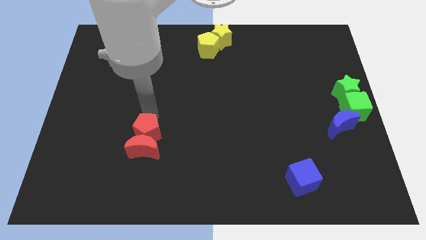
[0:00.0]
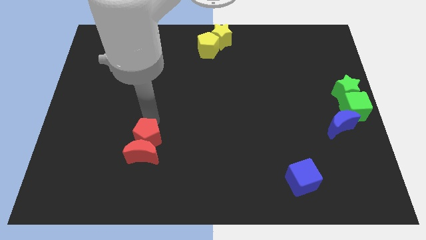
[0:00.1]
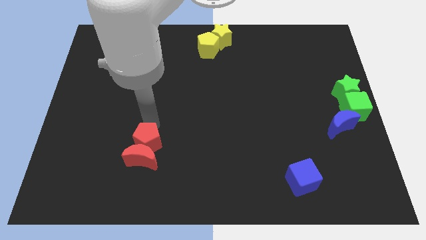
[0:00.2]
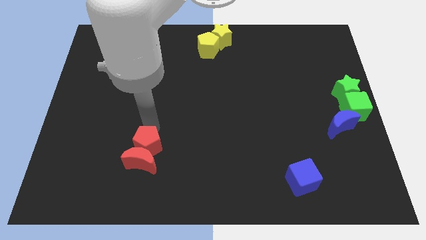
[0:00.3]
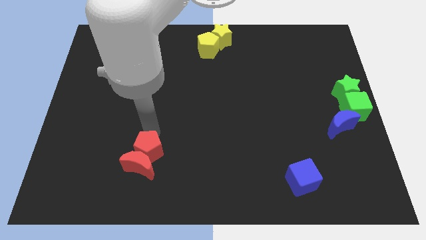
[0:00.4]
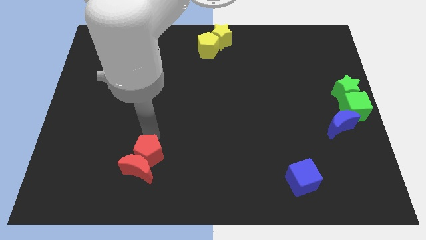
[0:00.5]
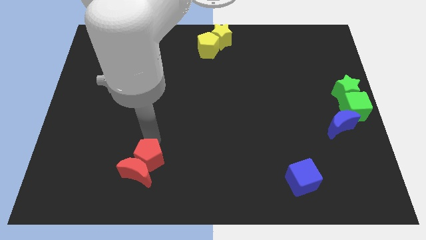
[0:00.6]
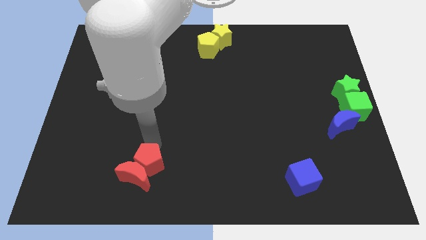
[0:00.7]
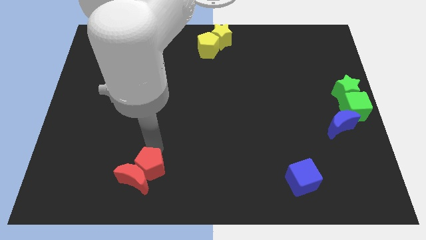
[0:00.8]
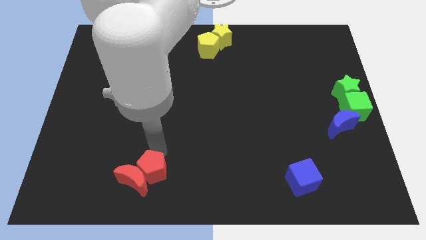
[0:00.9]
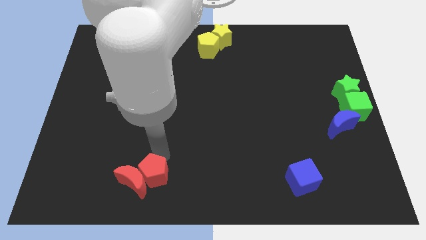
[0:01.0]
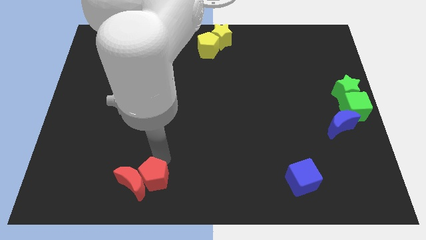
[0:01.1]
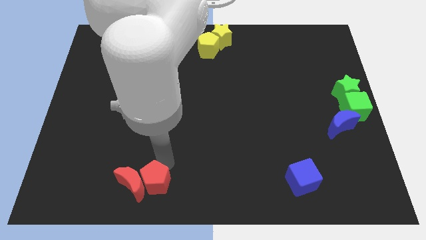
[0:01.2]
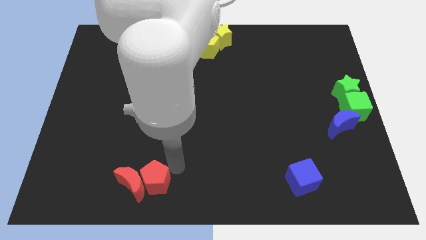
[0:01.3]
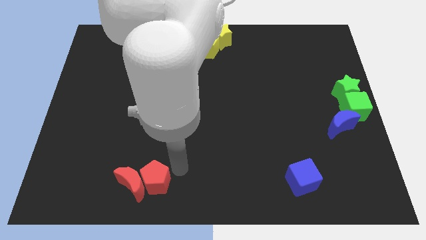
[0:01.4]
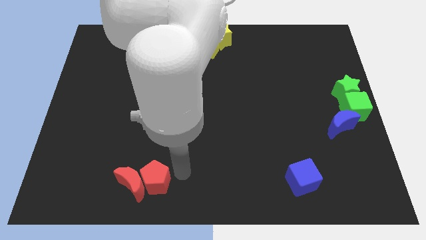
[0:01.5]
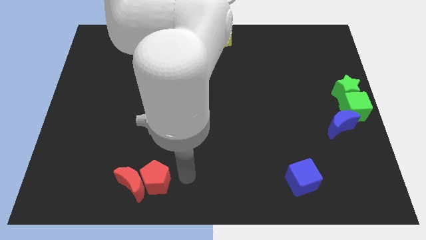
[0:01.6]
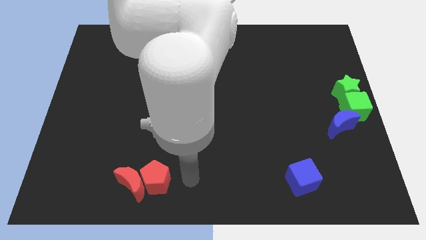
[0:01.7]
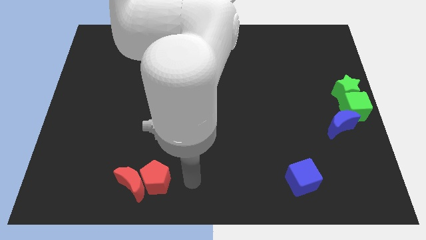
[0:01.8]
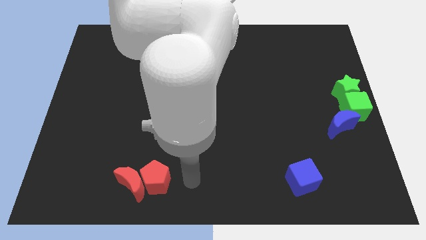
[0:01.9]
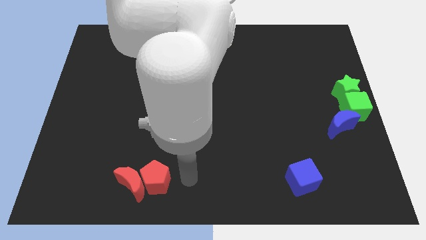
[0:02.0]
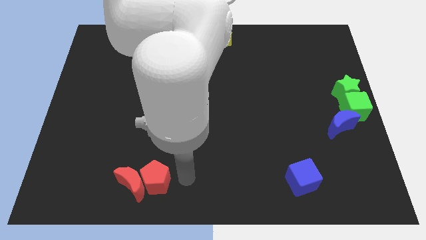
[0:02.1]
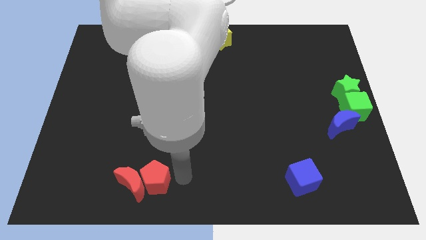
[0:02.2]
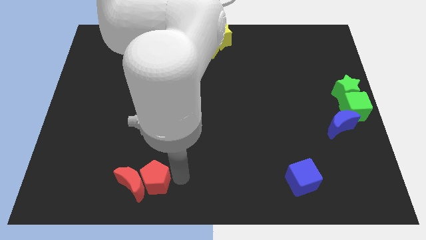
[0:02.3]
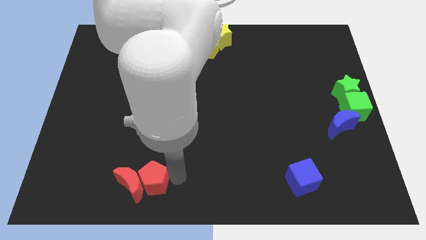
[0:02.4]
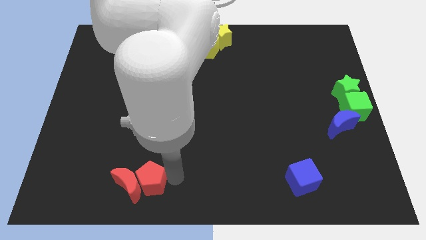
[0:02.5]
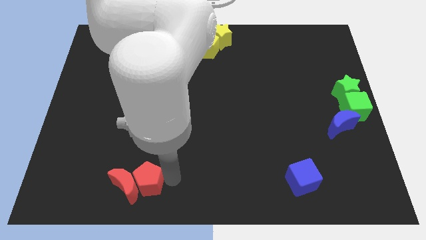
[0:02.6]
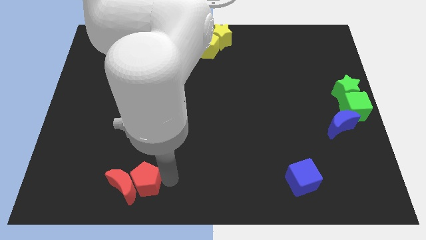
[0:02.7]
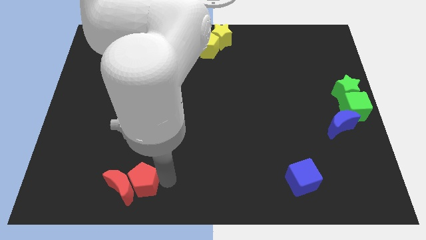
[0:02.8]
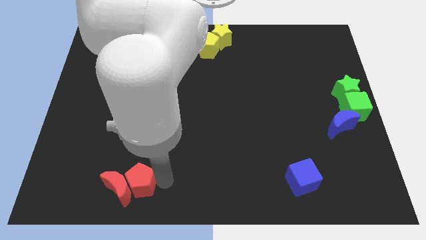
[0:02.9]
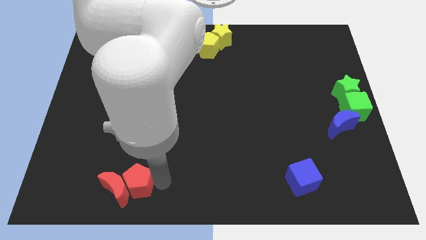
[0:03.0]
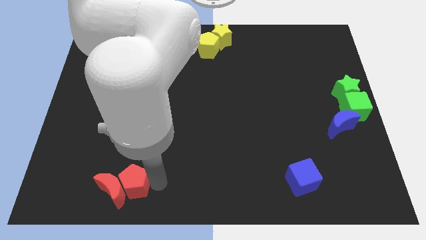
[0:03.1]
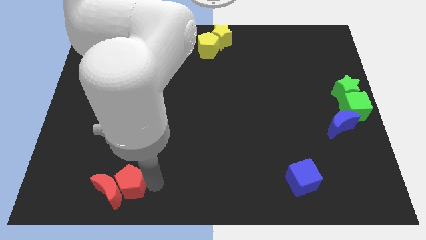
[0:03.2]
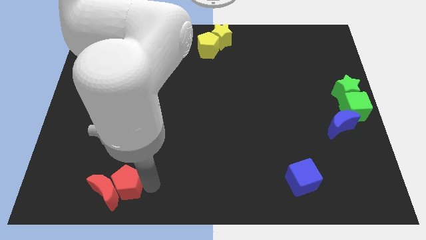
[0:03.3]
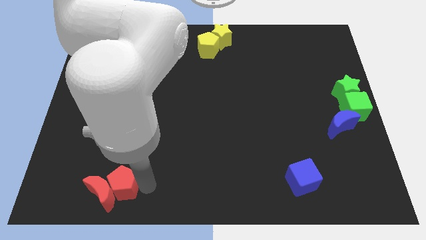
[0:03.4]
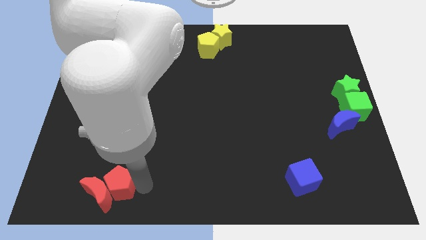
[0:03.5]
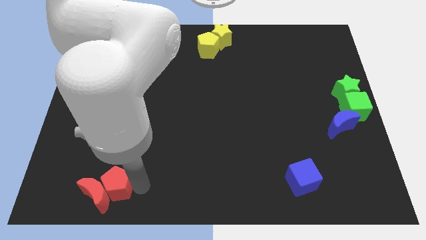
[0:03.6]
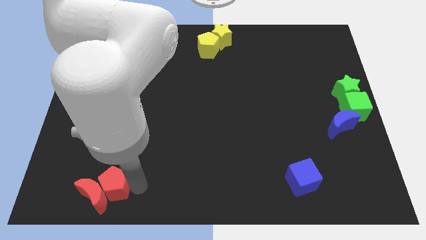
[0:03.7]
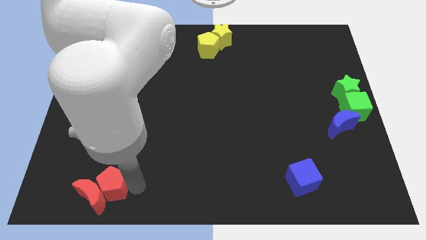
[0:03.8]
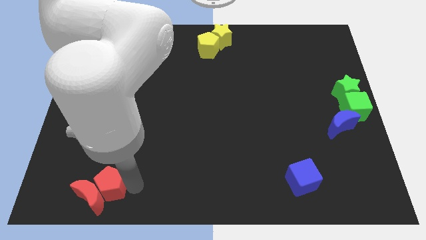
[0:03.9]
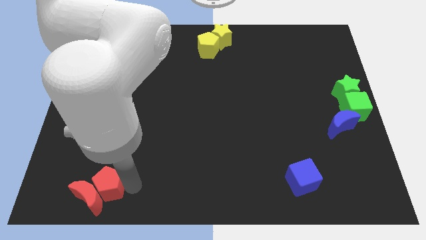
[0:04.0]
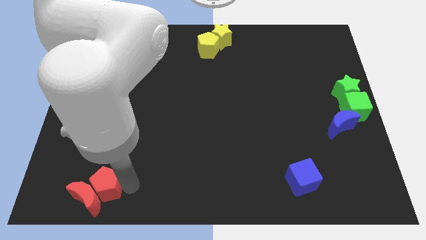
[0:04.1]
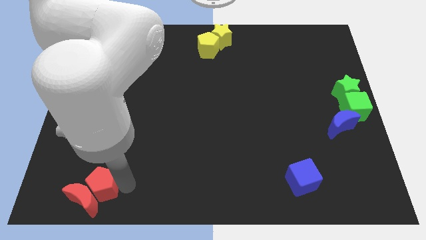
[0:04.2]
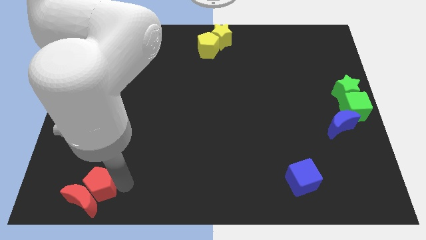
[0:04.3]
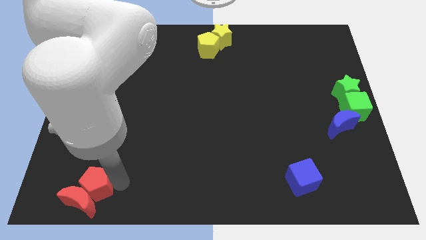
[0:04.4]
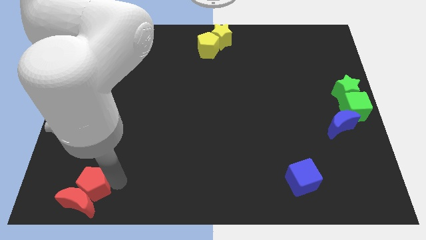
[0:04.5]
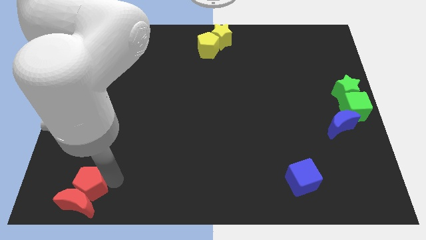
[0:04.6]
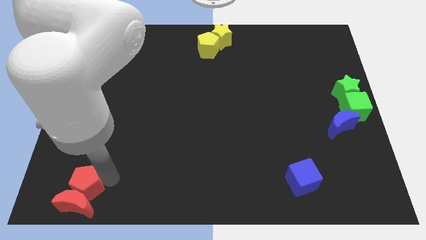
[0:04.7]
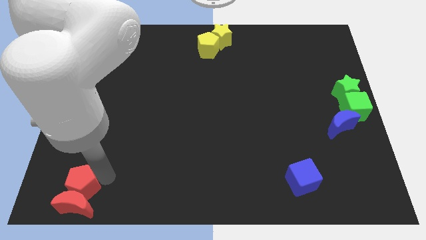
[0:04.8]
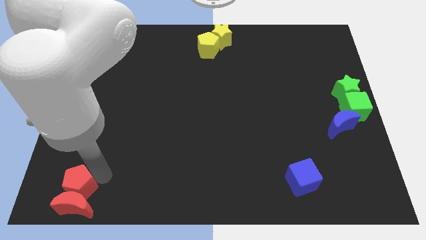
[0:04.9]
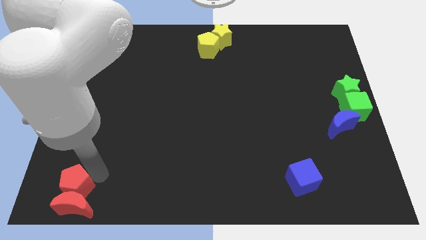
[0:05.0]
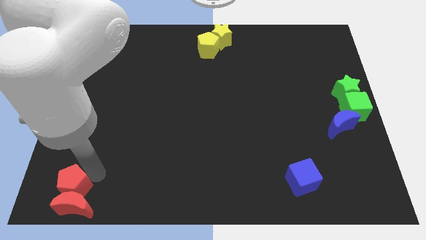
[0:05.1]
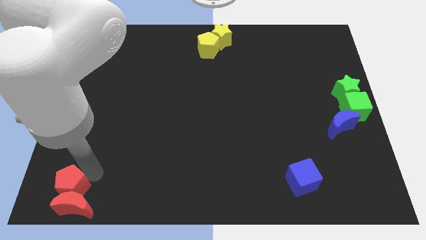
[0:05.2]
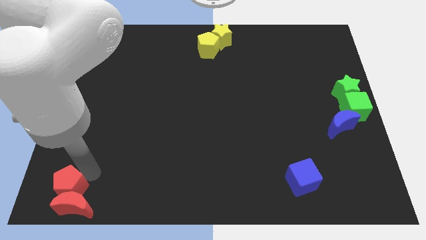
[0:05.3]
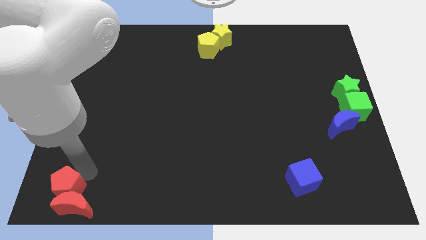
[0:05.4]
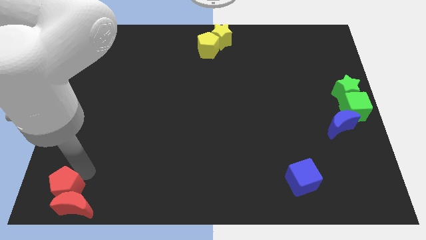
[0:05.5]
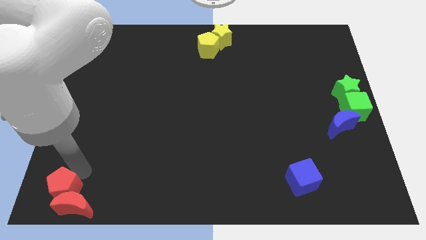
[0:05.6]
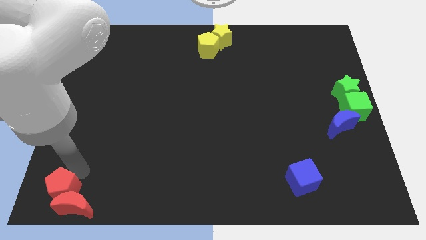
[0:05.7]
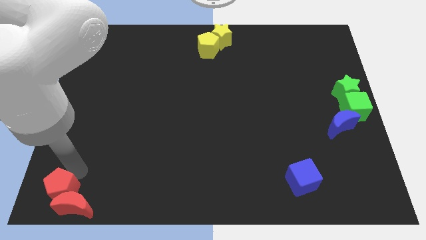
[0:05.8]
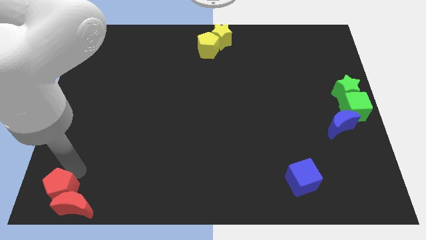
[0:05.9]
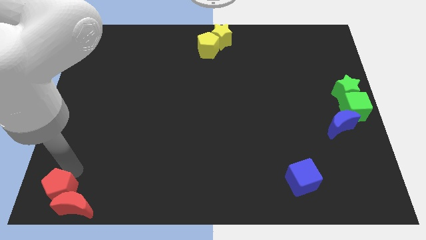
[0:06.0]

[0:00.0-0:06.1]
move the red blocks towards the bottom left corner of the board

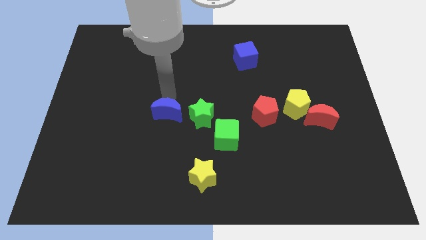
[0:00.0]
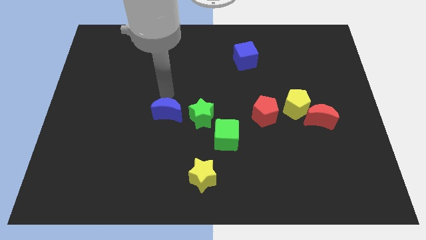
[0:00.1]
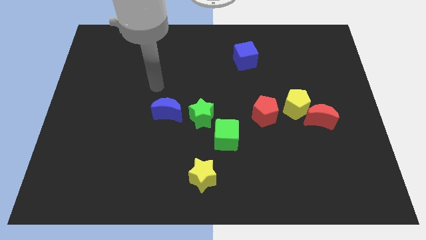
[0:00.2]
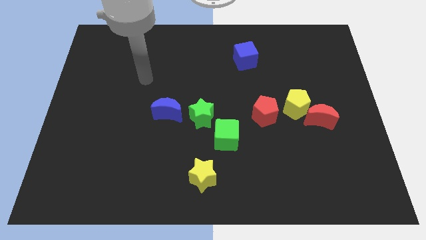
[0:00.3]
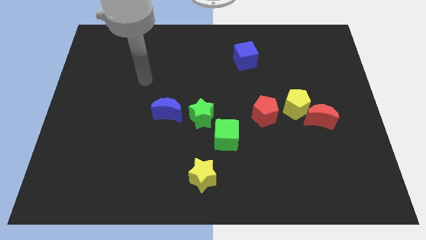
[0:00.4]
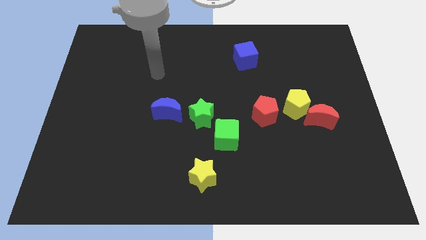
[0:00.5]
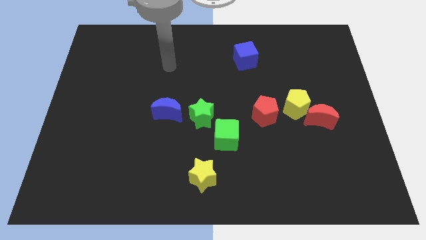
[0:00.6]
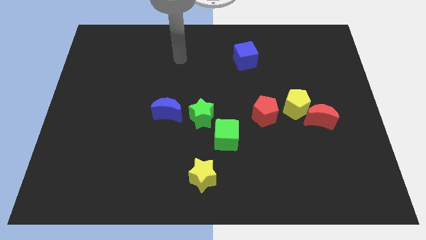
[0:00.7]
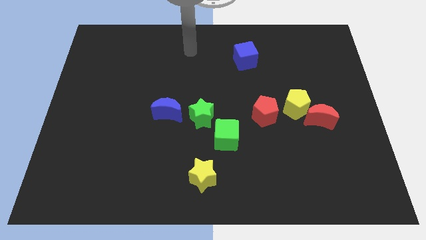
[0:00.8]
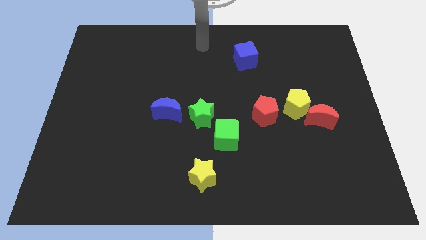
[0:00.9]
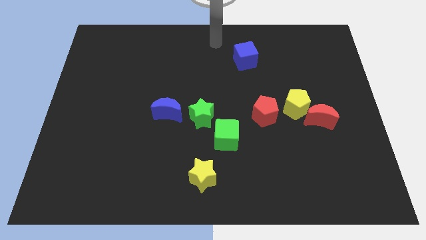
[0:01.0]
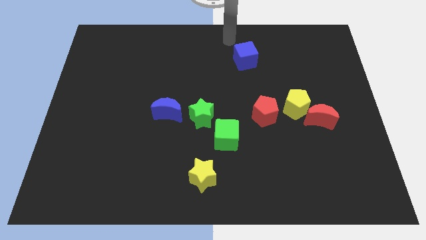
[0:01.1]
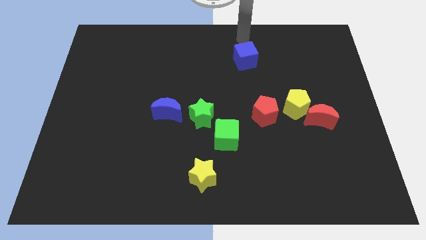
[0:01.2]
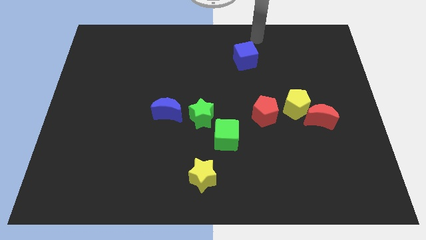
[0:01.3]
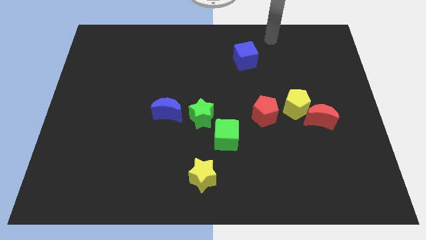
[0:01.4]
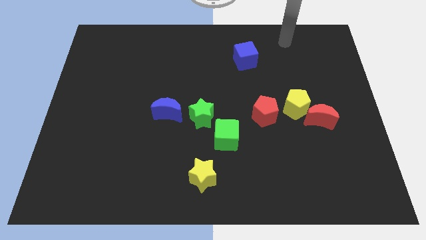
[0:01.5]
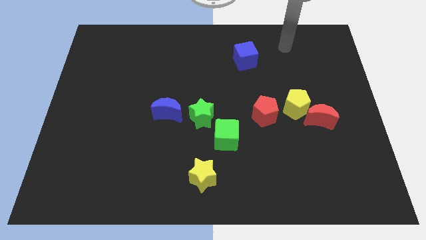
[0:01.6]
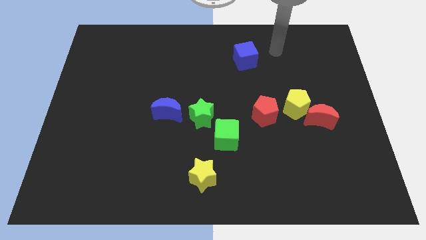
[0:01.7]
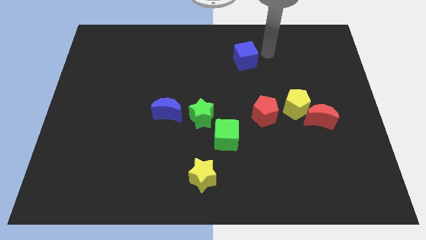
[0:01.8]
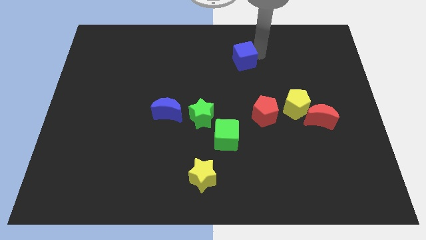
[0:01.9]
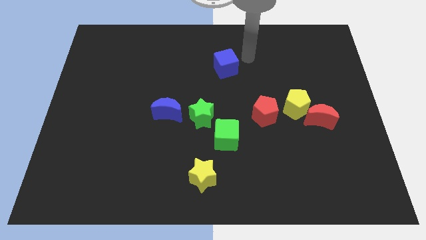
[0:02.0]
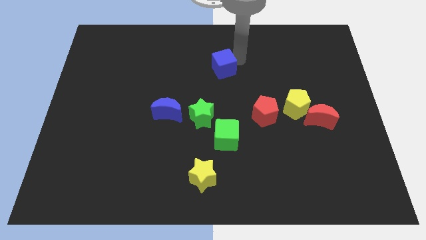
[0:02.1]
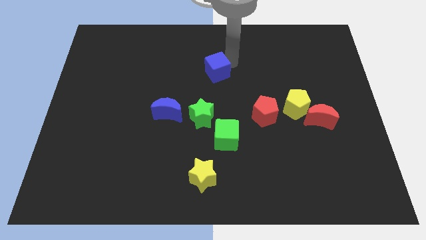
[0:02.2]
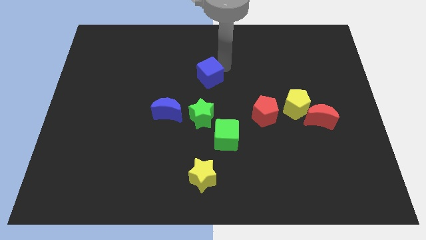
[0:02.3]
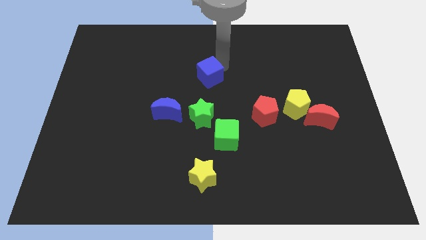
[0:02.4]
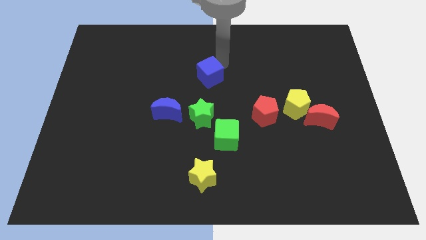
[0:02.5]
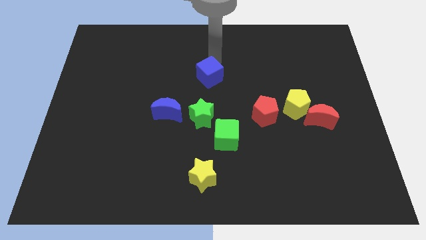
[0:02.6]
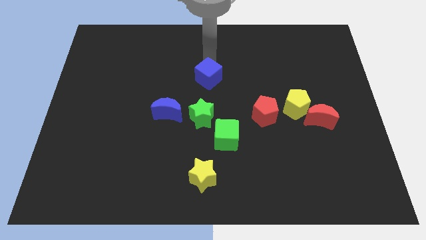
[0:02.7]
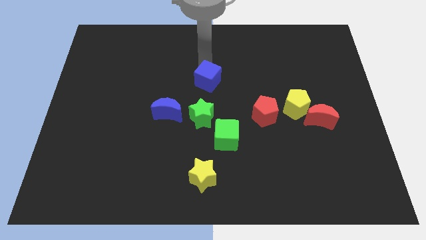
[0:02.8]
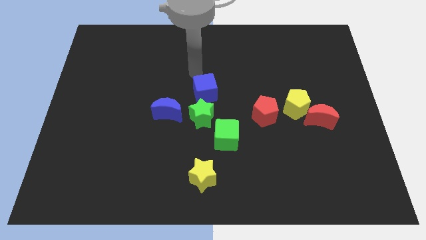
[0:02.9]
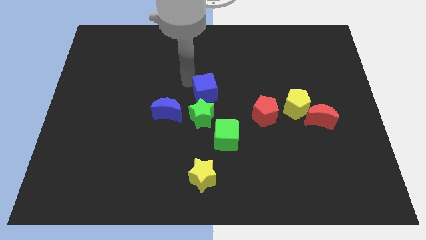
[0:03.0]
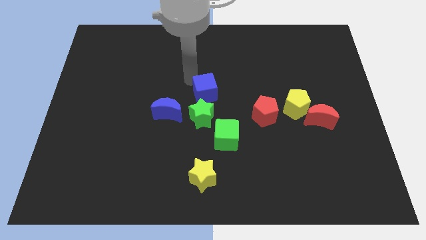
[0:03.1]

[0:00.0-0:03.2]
place the blue cube at the top of green star
